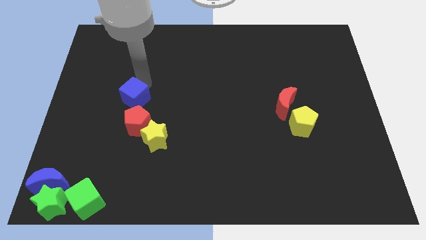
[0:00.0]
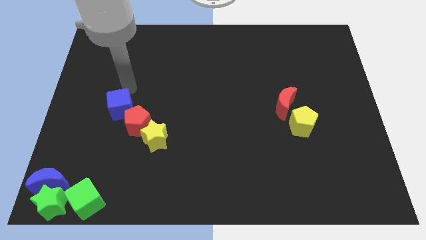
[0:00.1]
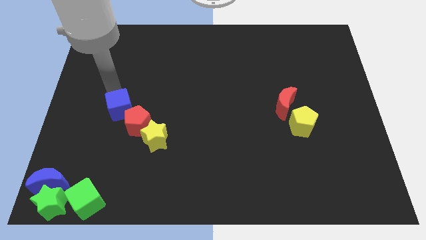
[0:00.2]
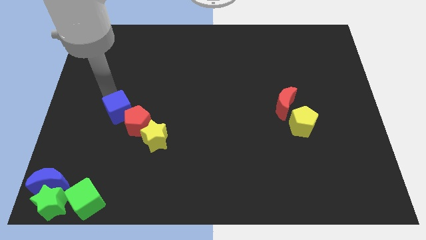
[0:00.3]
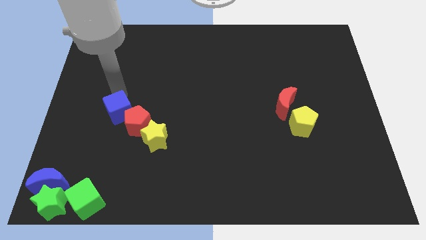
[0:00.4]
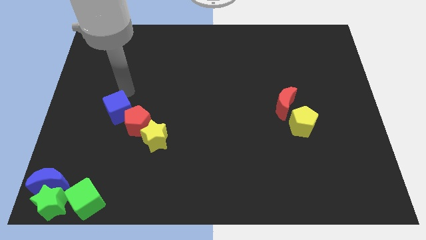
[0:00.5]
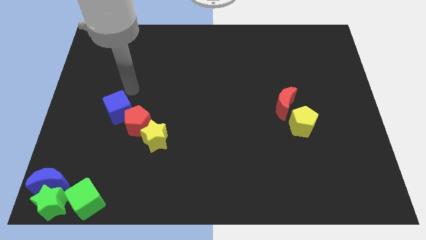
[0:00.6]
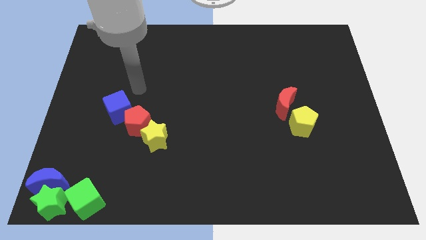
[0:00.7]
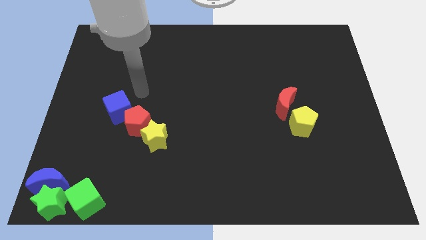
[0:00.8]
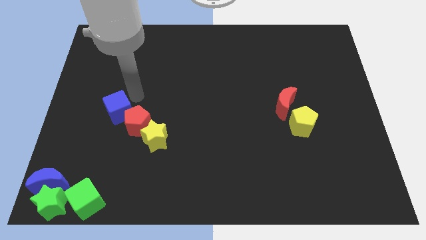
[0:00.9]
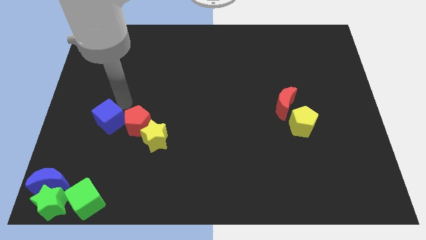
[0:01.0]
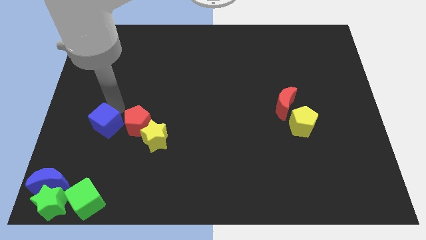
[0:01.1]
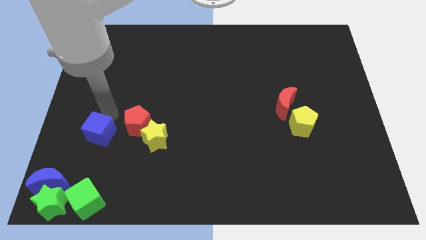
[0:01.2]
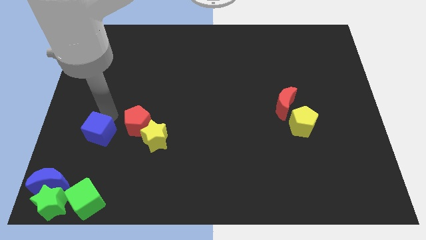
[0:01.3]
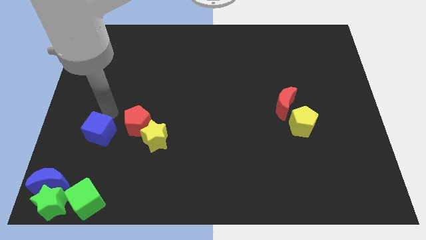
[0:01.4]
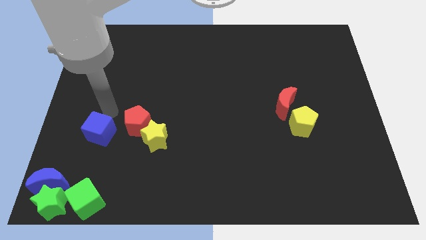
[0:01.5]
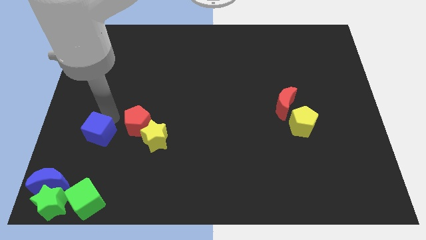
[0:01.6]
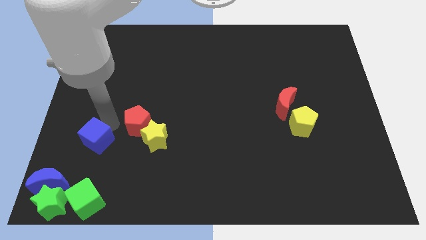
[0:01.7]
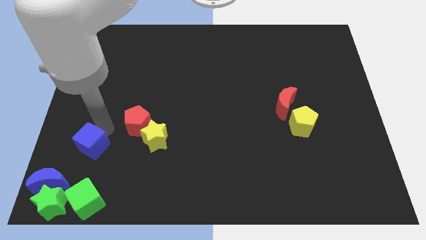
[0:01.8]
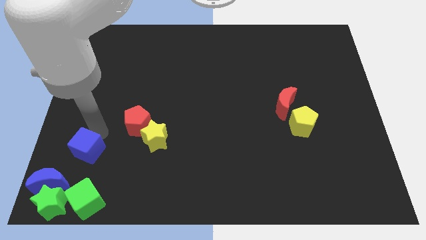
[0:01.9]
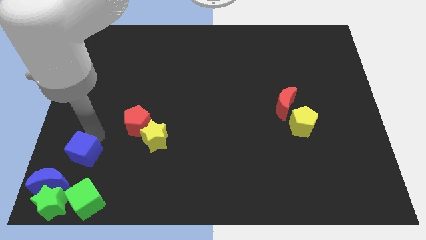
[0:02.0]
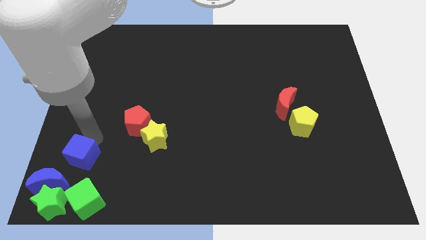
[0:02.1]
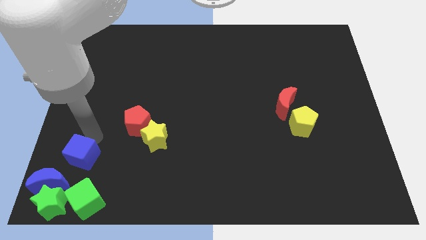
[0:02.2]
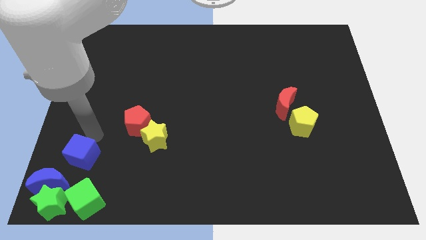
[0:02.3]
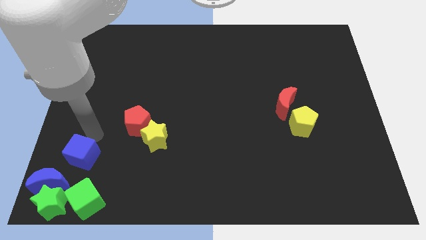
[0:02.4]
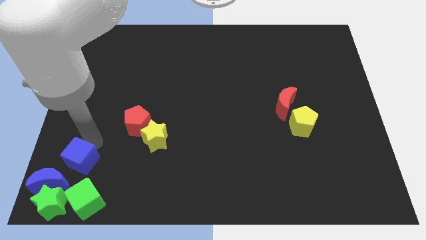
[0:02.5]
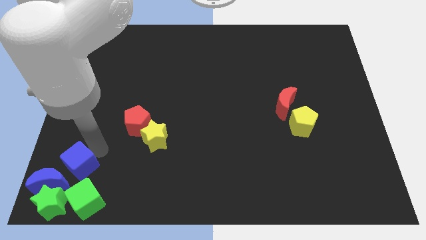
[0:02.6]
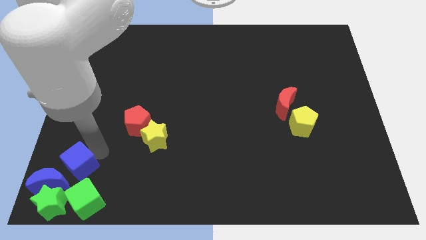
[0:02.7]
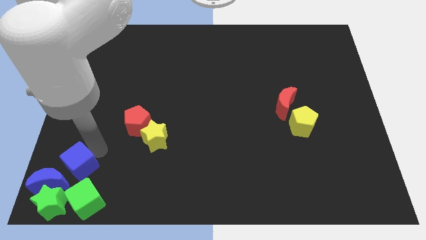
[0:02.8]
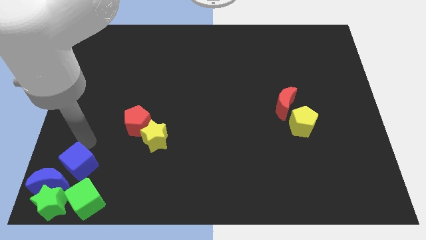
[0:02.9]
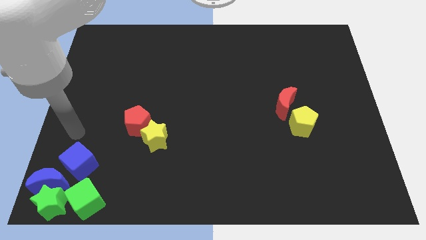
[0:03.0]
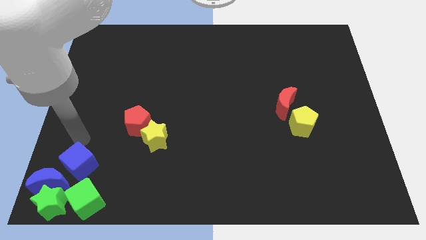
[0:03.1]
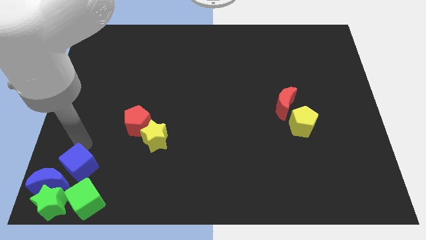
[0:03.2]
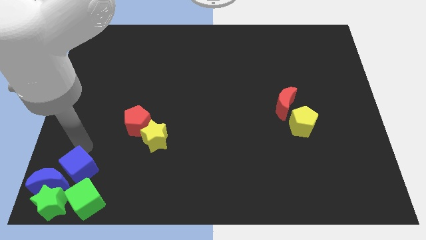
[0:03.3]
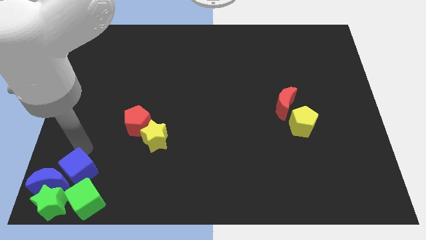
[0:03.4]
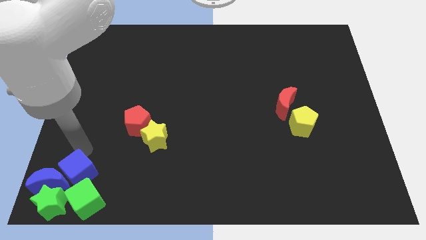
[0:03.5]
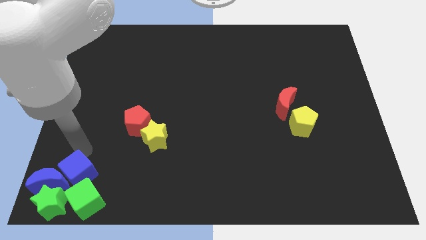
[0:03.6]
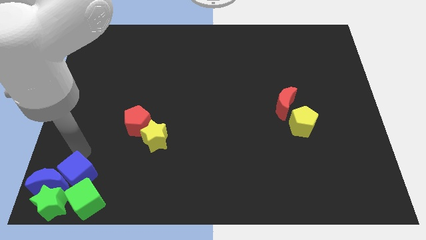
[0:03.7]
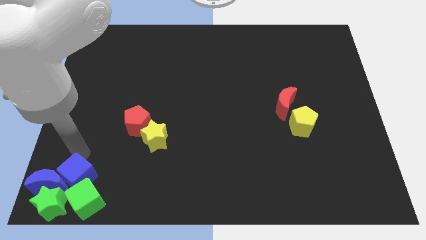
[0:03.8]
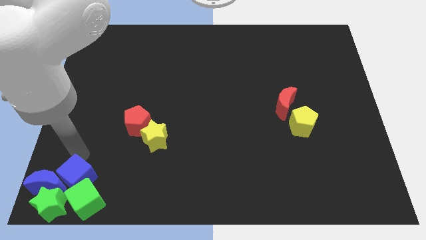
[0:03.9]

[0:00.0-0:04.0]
move the blue cube right beside the blue moon

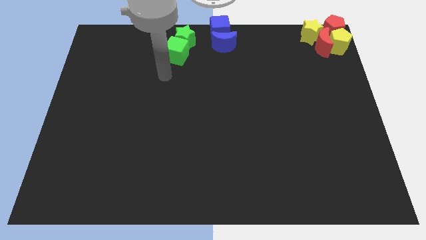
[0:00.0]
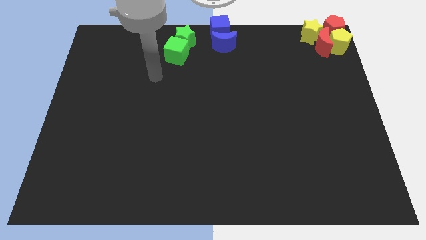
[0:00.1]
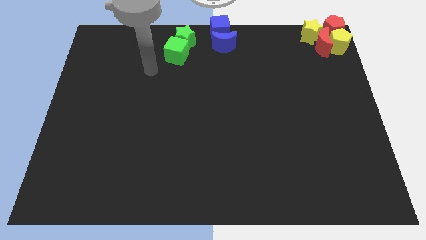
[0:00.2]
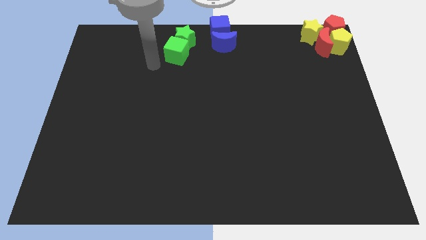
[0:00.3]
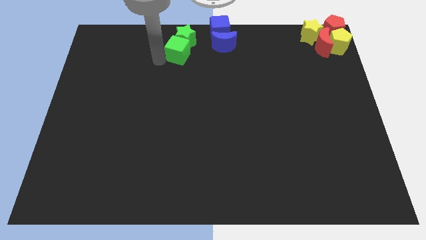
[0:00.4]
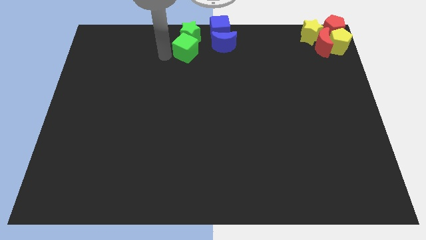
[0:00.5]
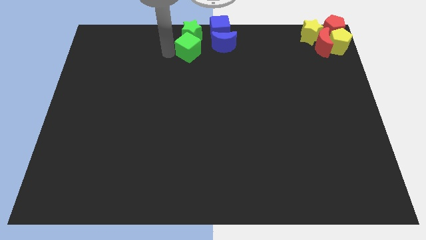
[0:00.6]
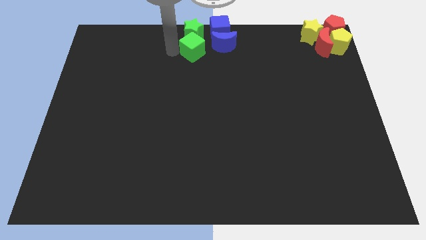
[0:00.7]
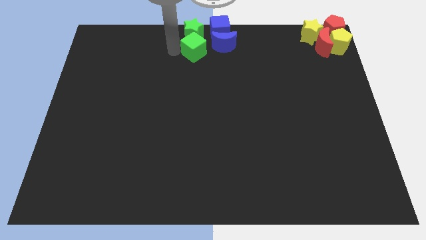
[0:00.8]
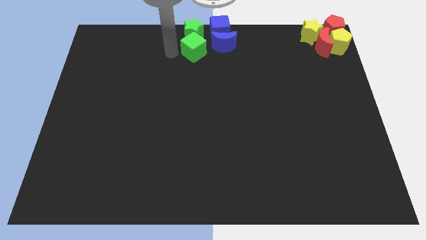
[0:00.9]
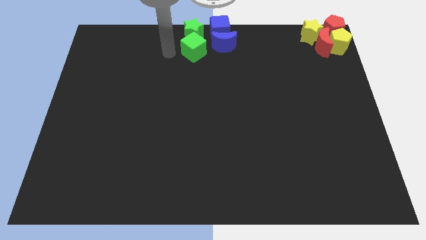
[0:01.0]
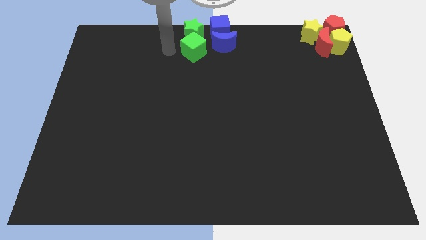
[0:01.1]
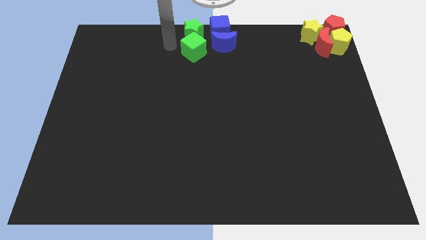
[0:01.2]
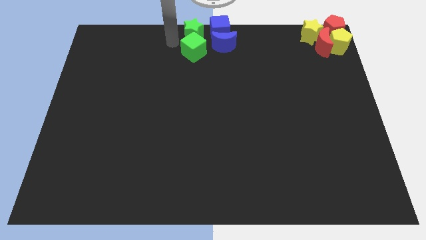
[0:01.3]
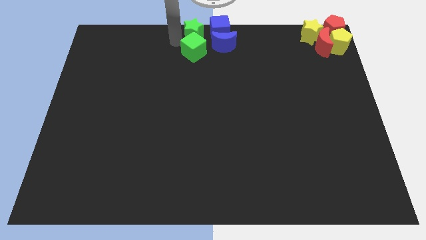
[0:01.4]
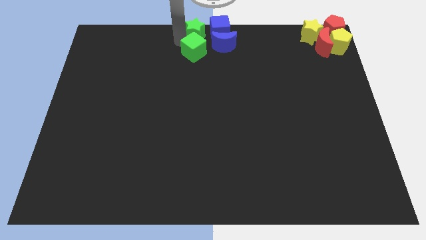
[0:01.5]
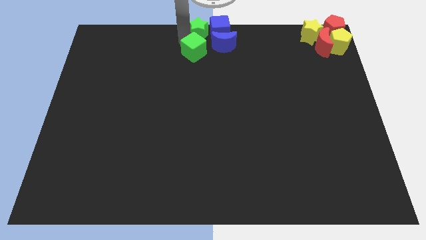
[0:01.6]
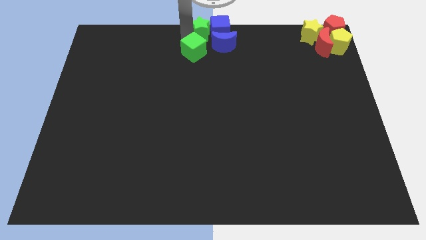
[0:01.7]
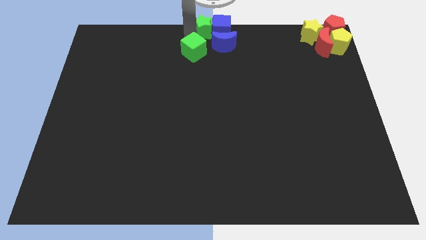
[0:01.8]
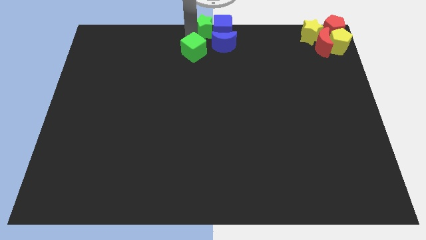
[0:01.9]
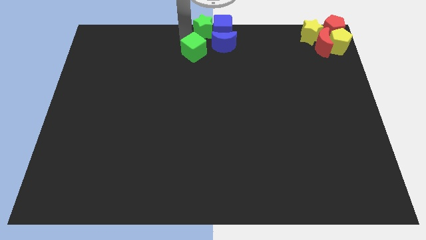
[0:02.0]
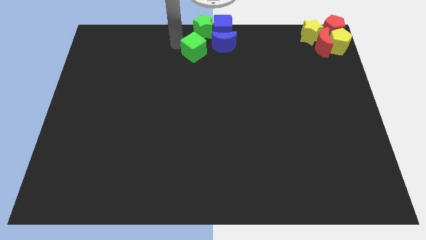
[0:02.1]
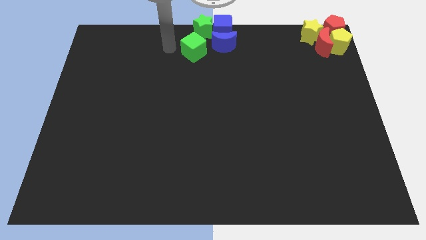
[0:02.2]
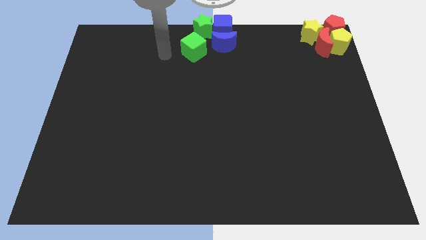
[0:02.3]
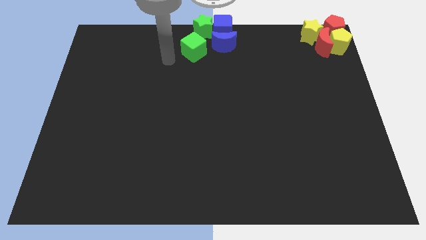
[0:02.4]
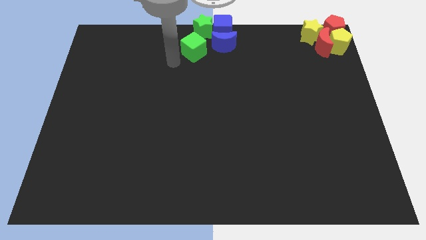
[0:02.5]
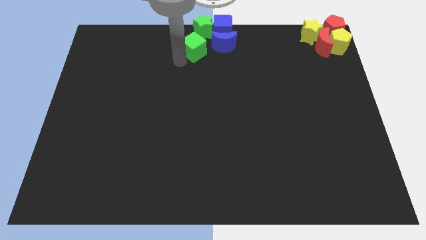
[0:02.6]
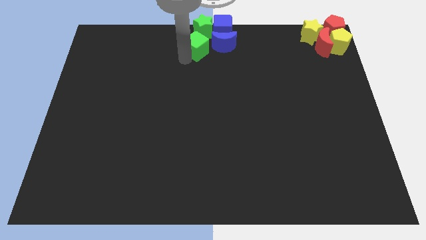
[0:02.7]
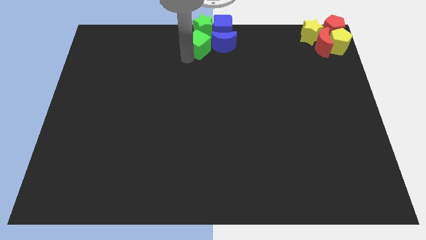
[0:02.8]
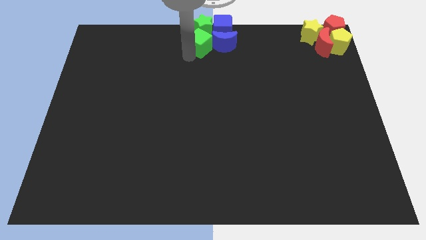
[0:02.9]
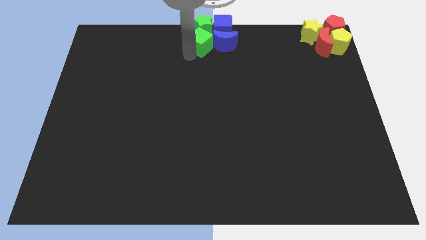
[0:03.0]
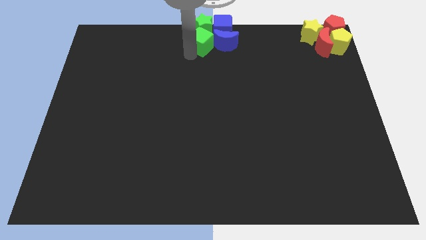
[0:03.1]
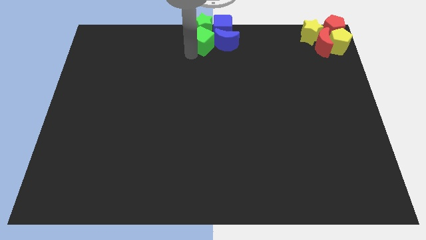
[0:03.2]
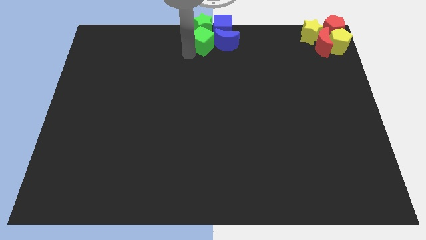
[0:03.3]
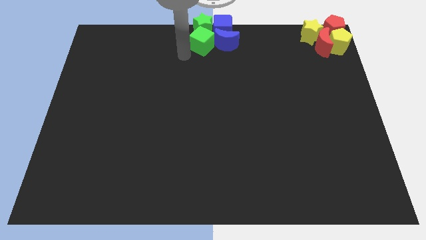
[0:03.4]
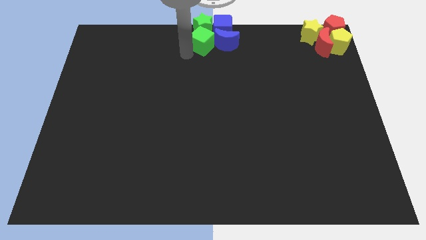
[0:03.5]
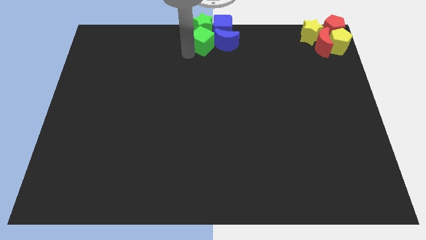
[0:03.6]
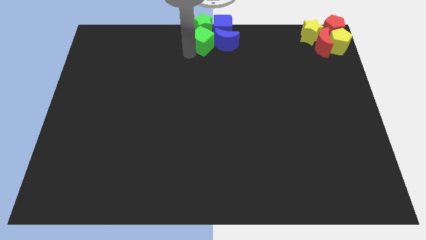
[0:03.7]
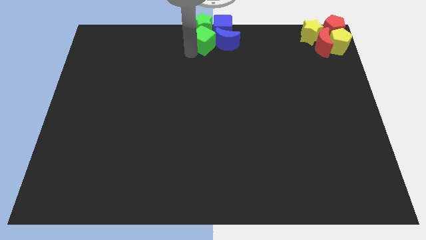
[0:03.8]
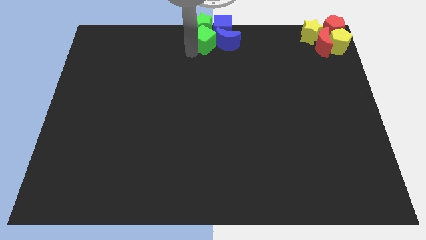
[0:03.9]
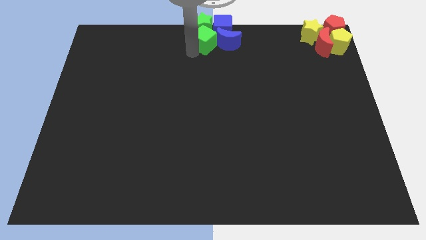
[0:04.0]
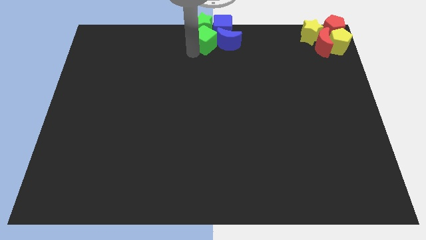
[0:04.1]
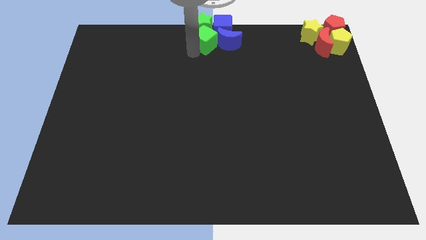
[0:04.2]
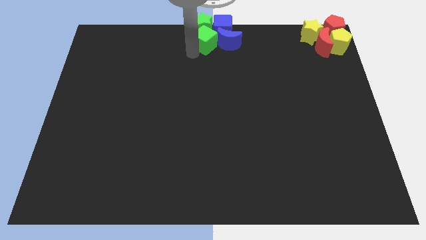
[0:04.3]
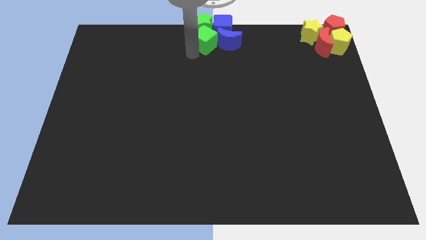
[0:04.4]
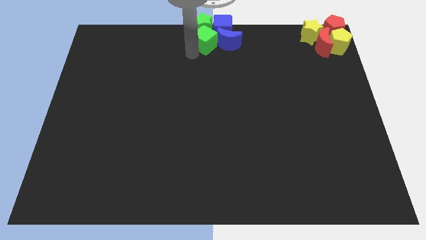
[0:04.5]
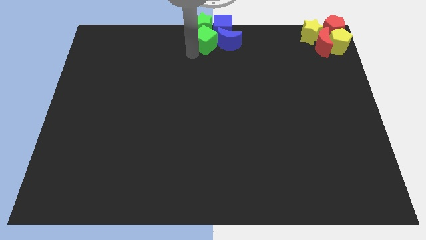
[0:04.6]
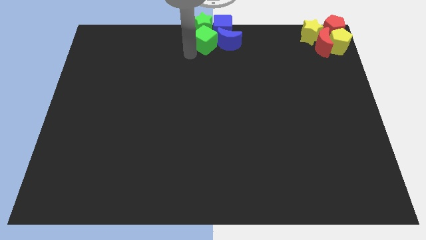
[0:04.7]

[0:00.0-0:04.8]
place the green blocks and the blue blocks at the top center of the board

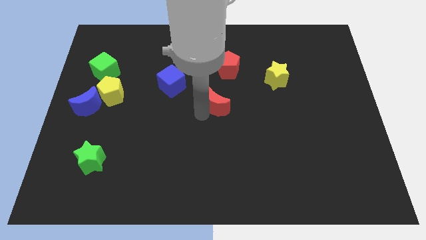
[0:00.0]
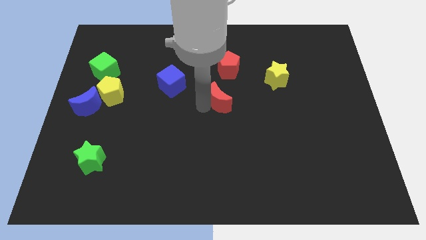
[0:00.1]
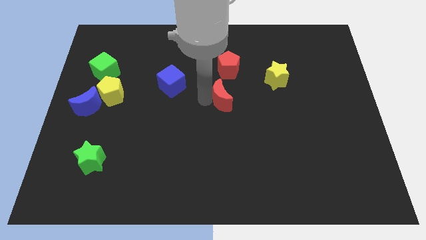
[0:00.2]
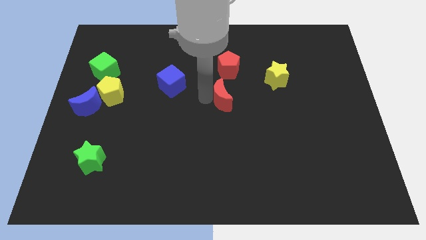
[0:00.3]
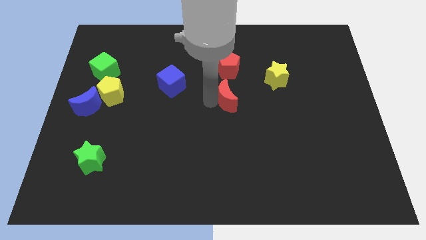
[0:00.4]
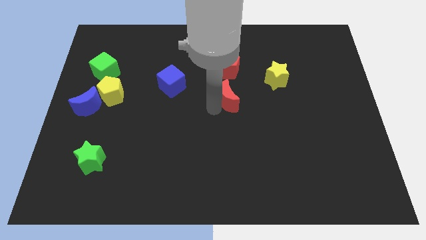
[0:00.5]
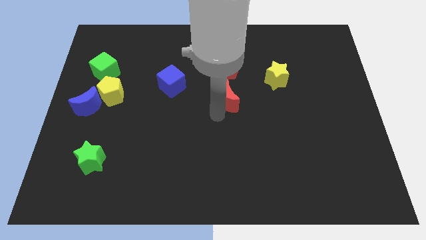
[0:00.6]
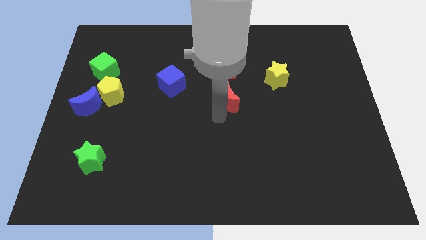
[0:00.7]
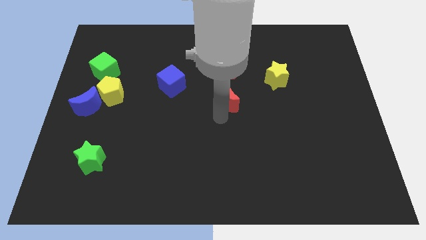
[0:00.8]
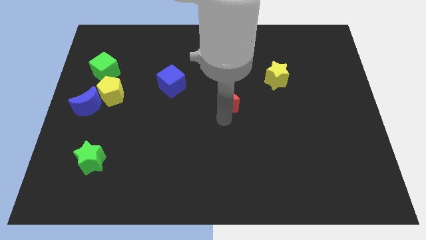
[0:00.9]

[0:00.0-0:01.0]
place the red moon at the bottom of red pentagon
